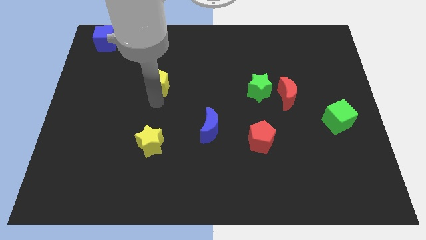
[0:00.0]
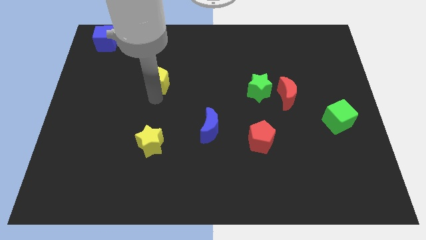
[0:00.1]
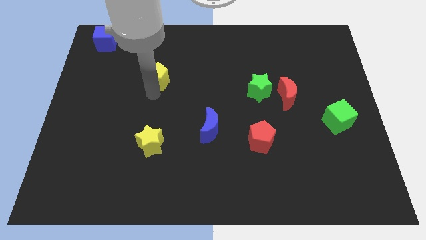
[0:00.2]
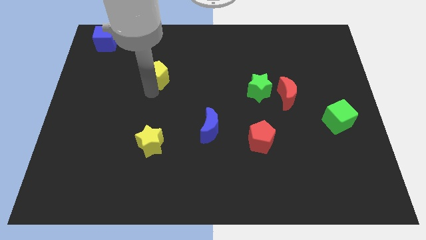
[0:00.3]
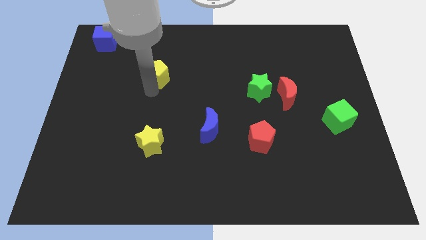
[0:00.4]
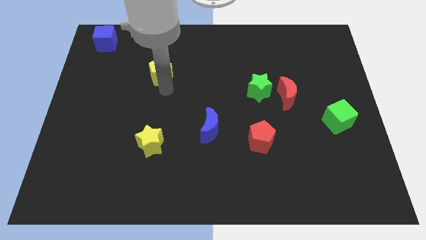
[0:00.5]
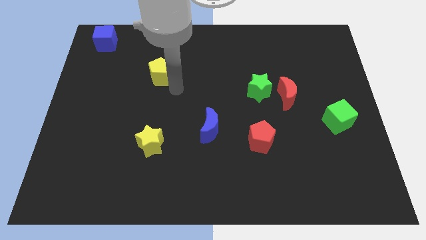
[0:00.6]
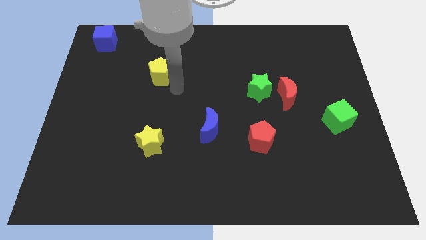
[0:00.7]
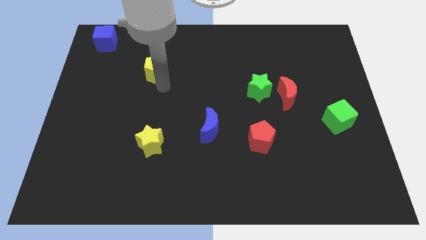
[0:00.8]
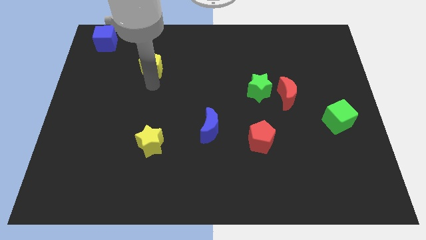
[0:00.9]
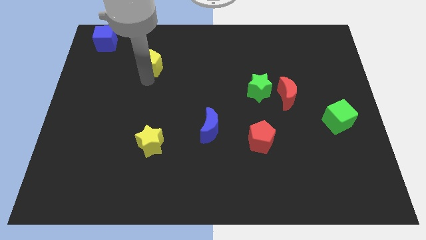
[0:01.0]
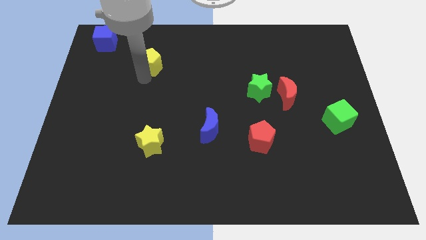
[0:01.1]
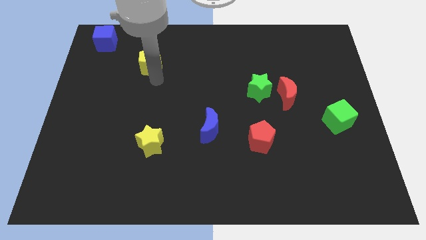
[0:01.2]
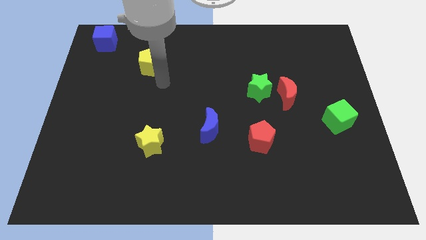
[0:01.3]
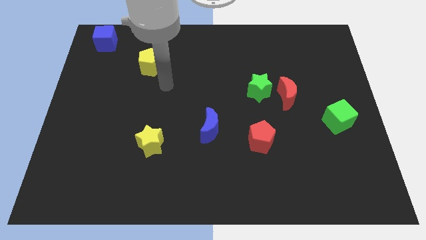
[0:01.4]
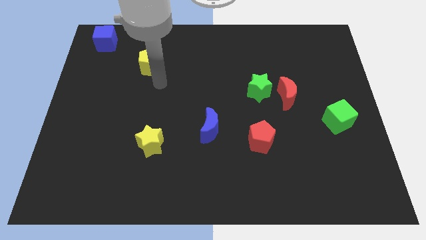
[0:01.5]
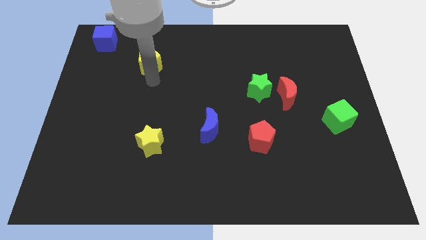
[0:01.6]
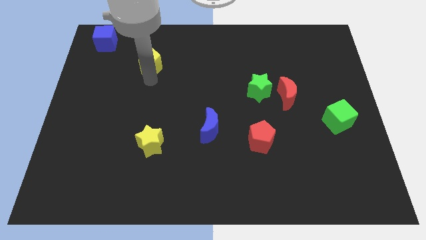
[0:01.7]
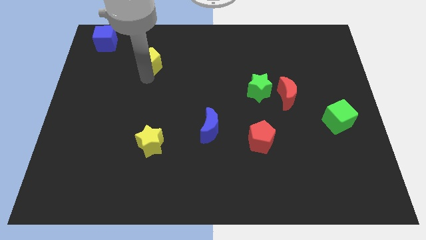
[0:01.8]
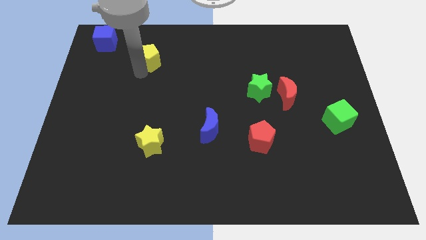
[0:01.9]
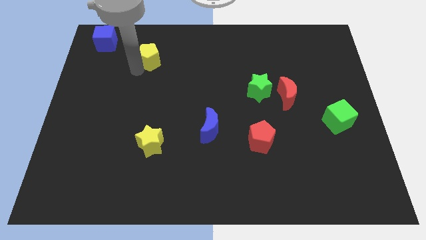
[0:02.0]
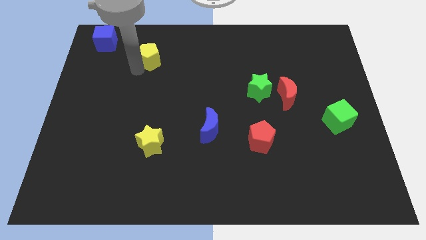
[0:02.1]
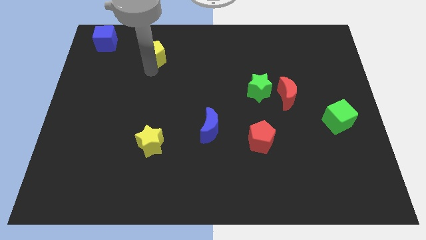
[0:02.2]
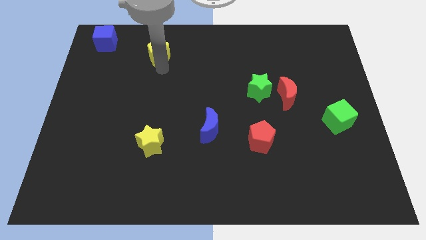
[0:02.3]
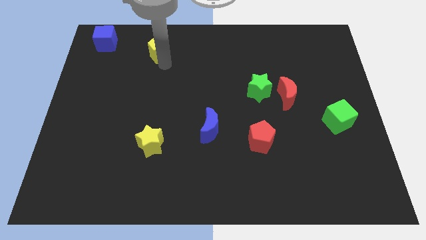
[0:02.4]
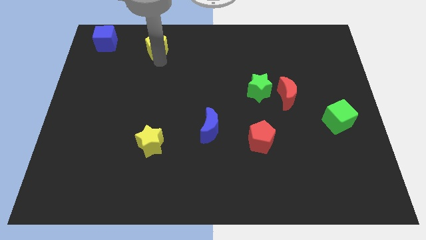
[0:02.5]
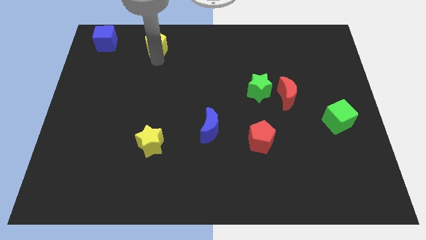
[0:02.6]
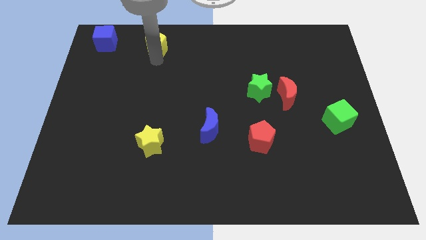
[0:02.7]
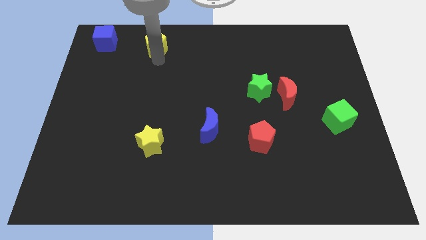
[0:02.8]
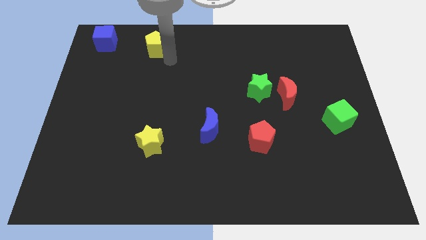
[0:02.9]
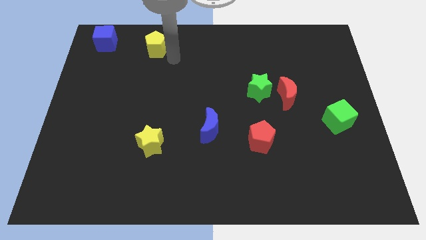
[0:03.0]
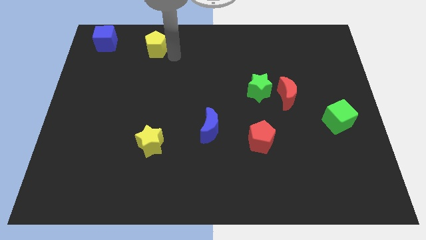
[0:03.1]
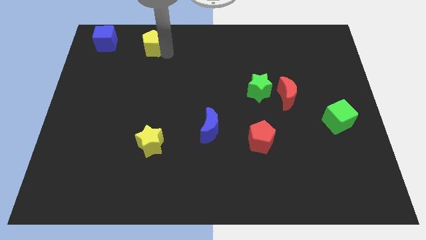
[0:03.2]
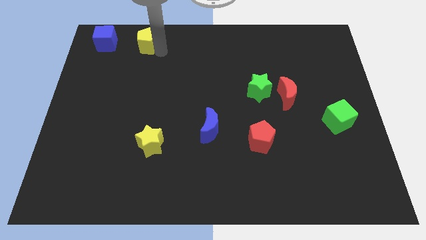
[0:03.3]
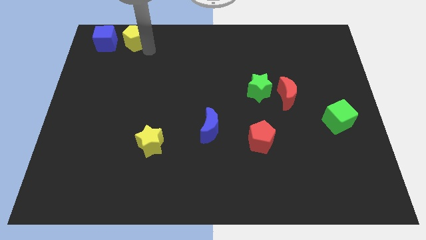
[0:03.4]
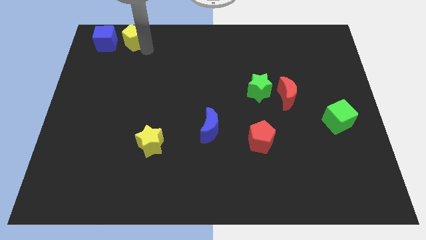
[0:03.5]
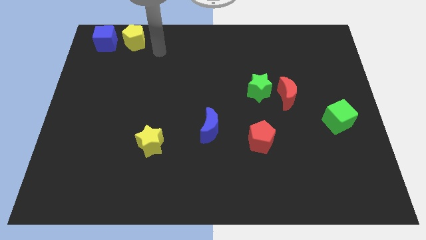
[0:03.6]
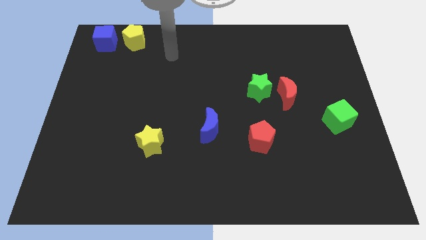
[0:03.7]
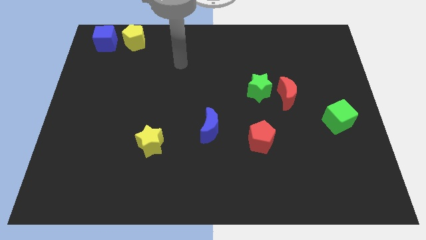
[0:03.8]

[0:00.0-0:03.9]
place the yellow pentagon right to the blue cube

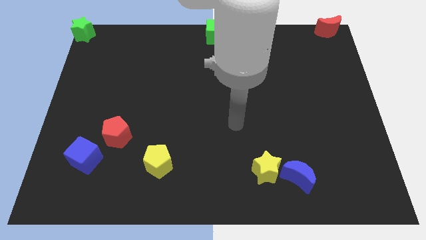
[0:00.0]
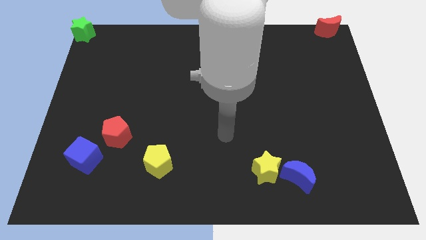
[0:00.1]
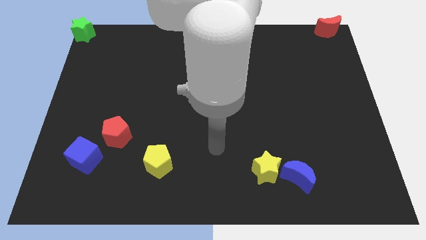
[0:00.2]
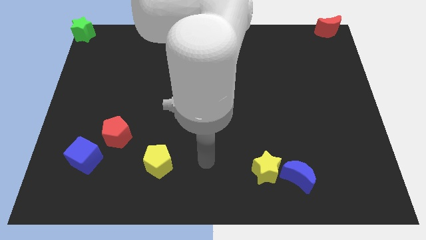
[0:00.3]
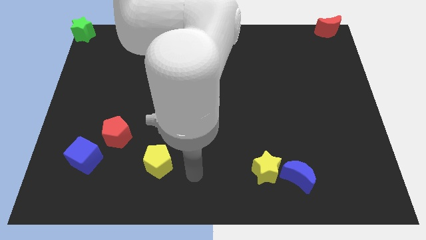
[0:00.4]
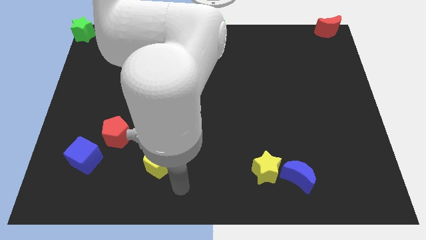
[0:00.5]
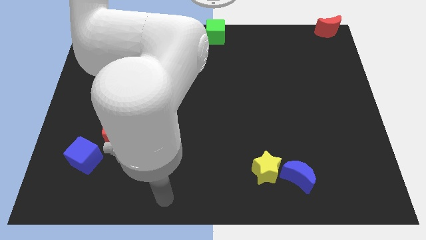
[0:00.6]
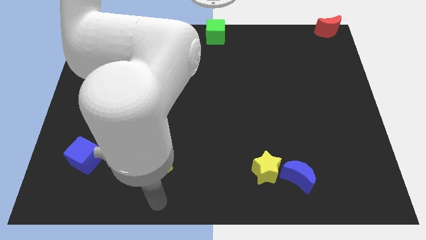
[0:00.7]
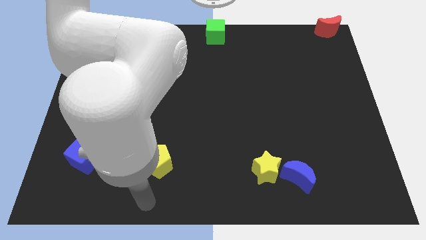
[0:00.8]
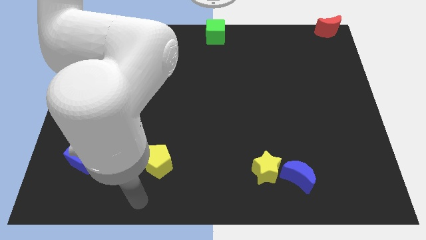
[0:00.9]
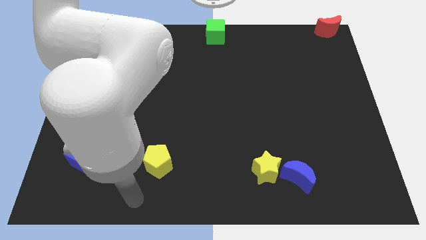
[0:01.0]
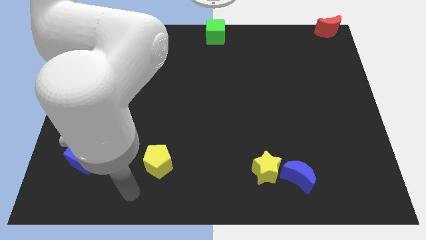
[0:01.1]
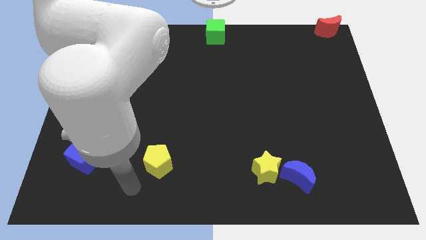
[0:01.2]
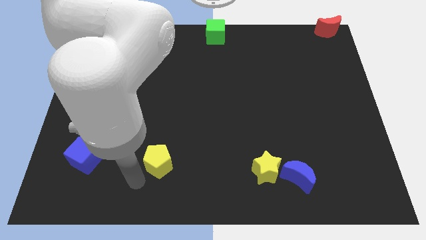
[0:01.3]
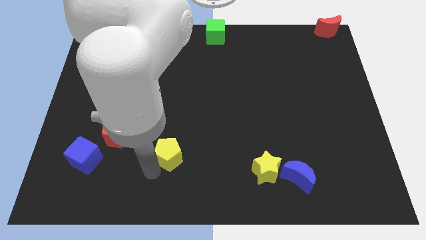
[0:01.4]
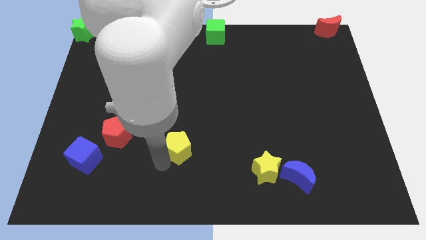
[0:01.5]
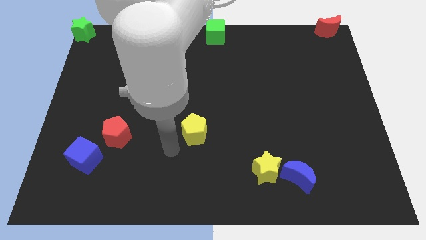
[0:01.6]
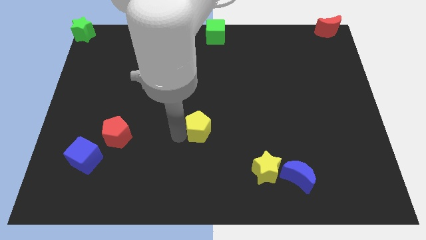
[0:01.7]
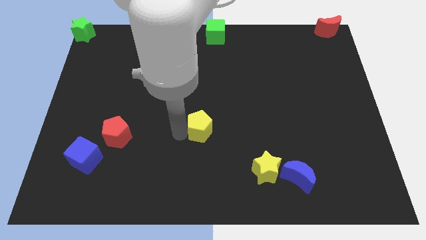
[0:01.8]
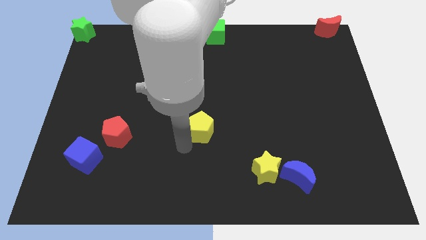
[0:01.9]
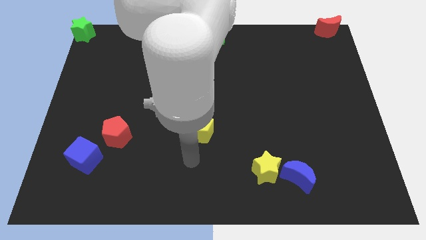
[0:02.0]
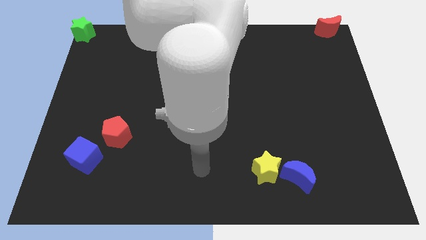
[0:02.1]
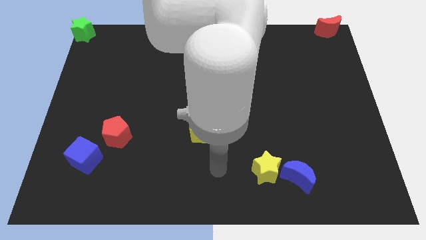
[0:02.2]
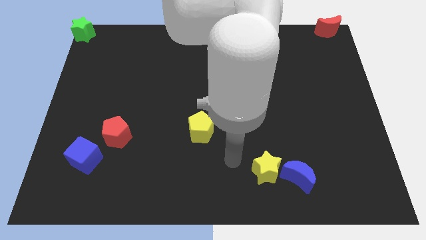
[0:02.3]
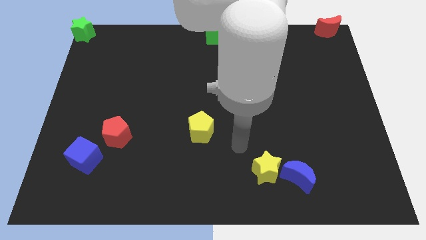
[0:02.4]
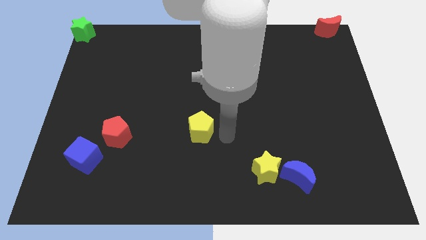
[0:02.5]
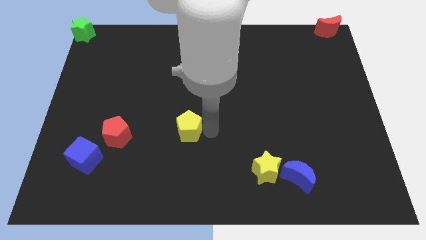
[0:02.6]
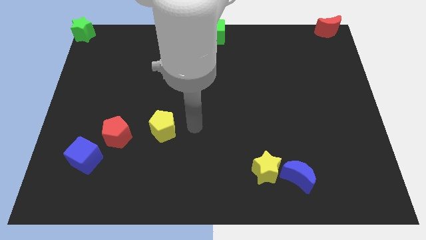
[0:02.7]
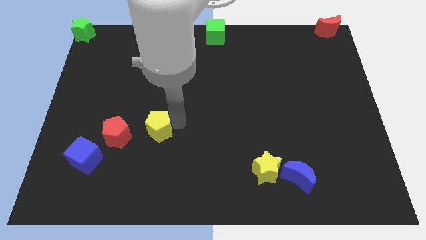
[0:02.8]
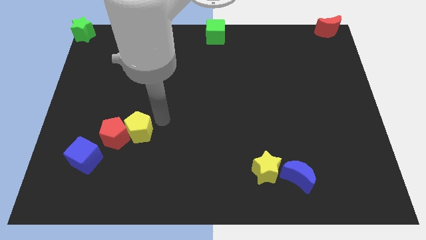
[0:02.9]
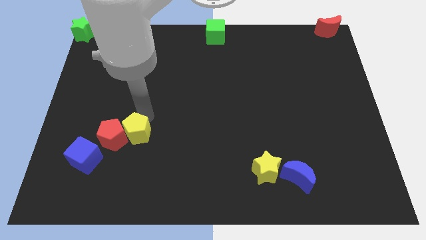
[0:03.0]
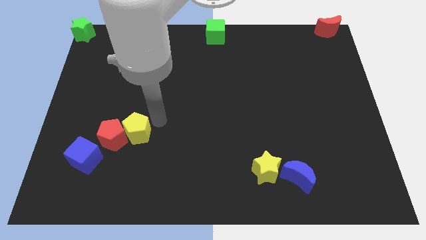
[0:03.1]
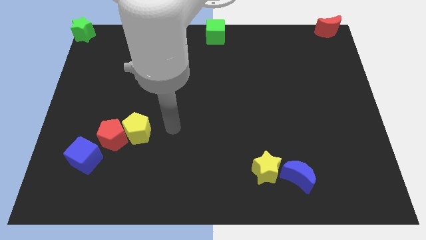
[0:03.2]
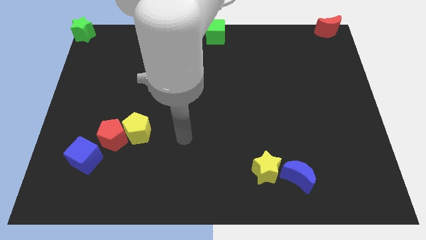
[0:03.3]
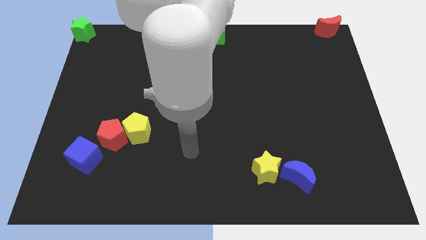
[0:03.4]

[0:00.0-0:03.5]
move yellow pentagon into the red pentagon

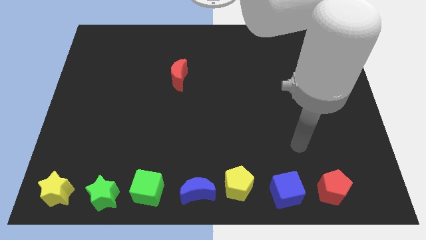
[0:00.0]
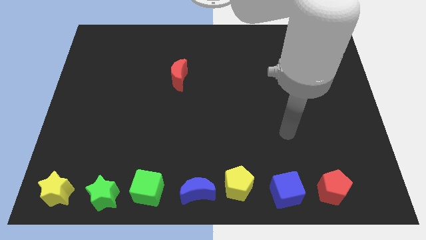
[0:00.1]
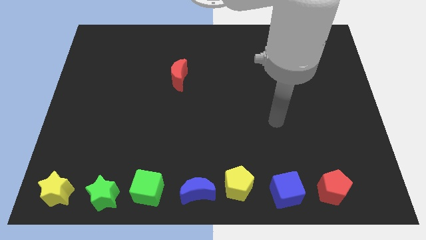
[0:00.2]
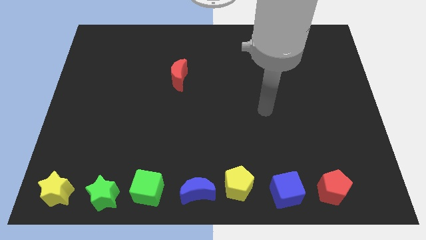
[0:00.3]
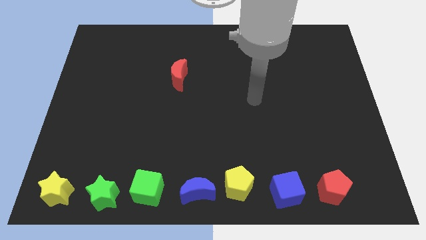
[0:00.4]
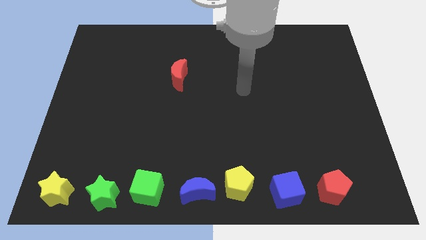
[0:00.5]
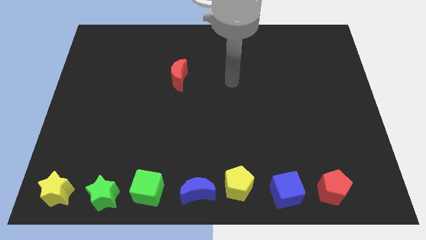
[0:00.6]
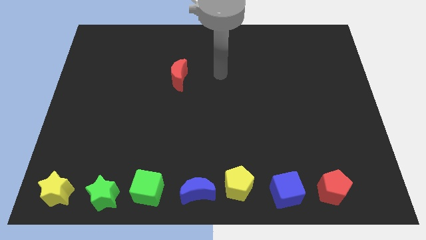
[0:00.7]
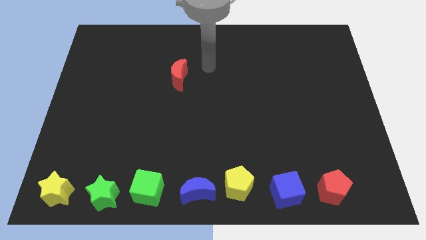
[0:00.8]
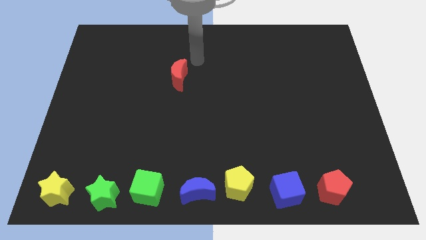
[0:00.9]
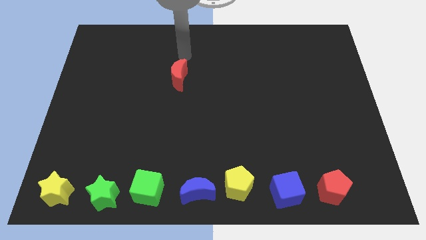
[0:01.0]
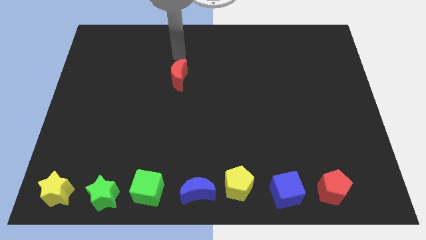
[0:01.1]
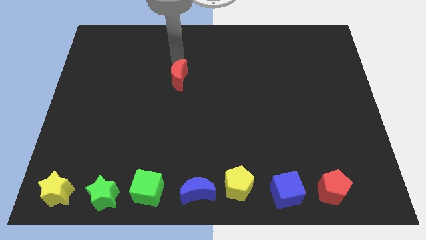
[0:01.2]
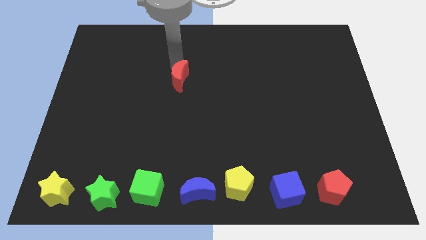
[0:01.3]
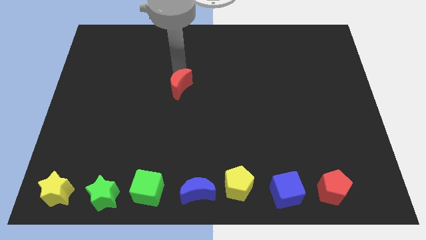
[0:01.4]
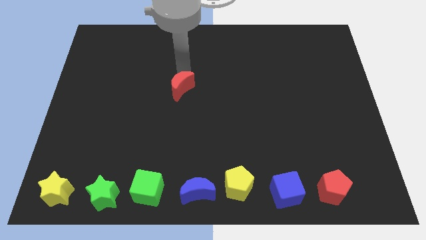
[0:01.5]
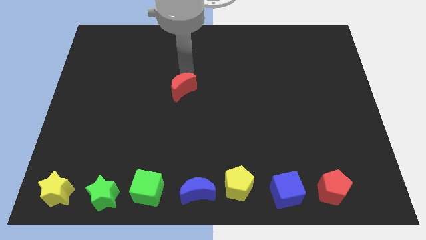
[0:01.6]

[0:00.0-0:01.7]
slightly push the red crescent towards the blue moon
